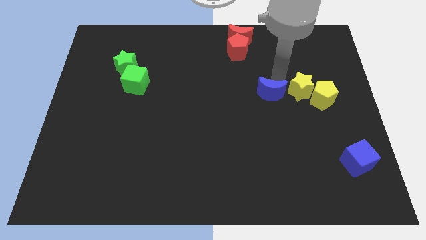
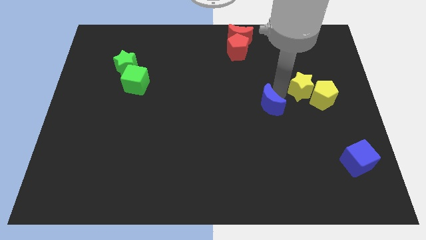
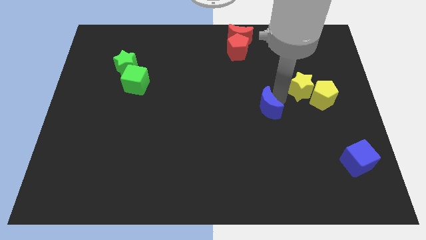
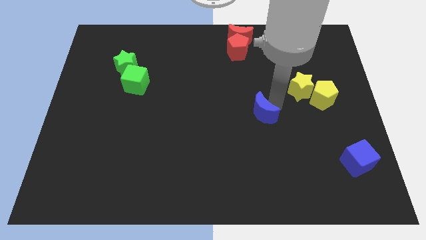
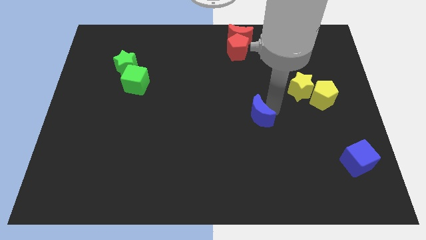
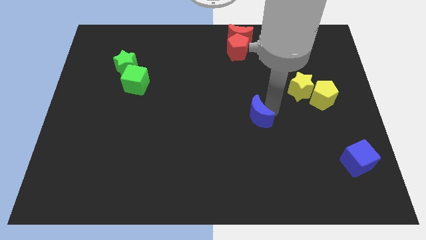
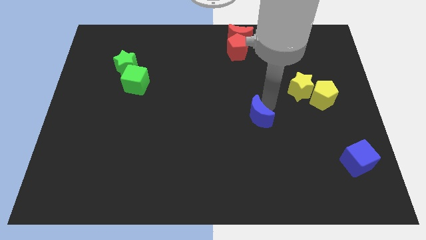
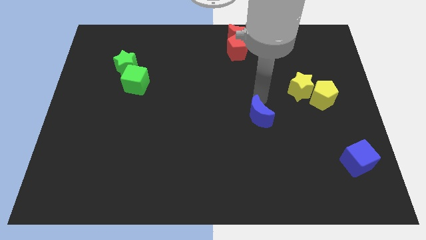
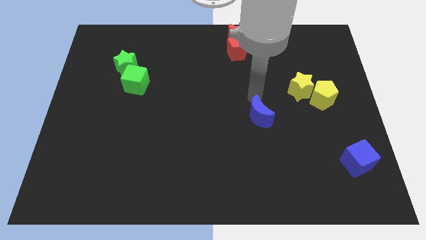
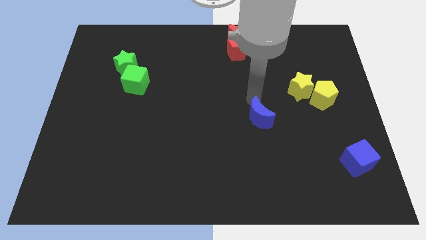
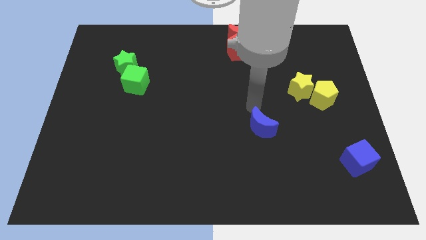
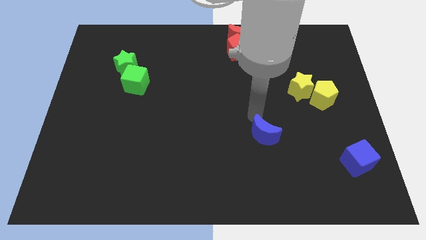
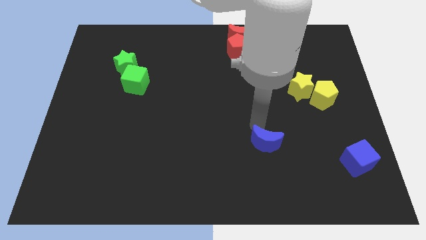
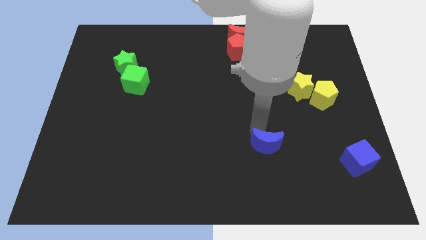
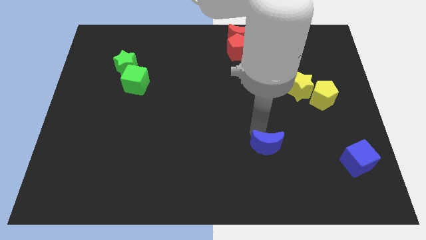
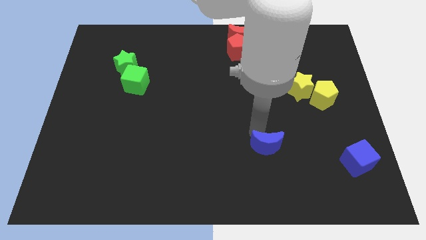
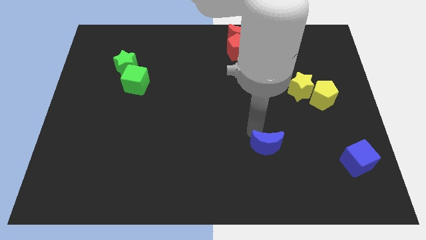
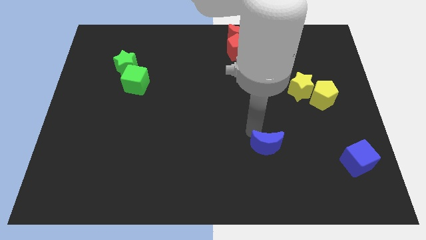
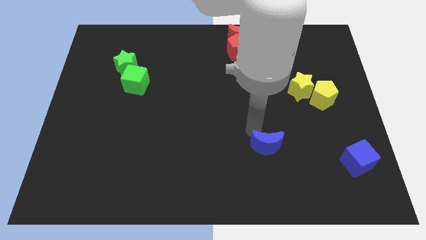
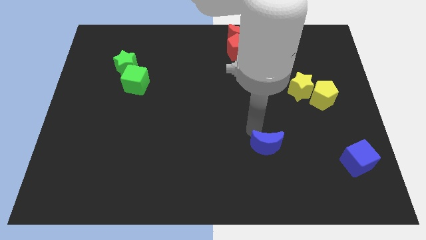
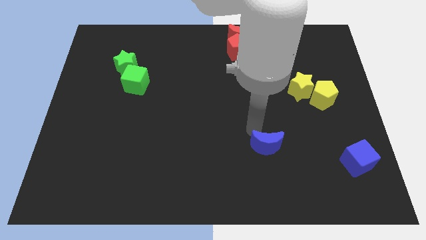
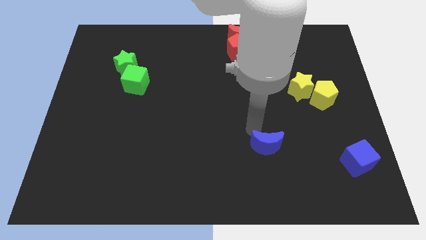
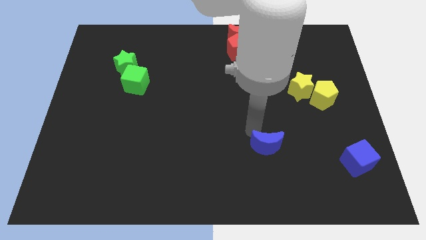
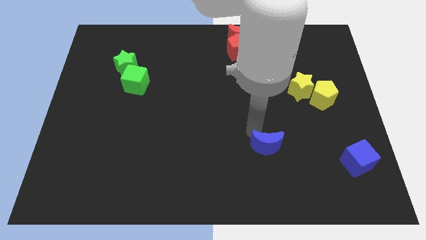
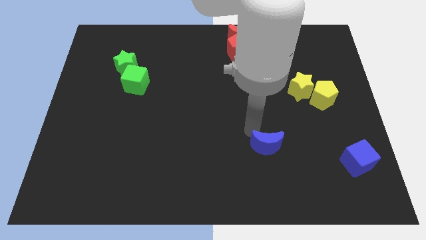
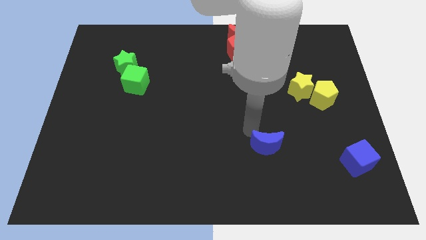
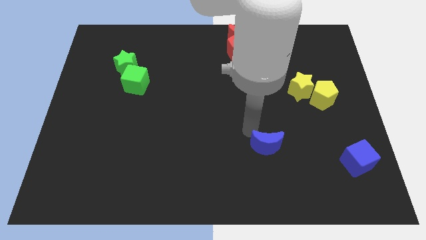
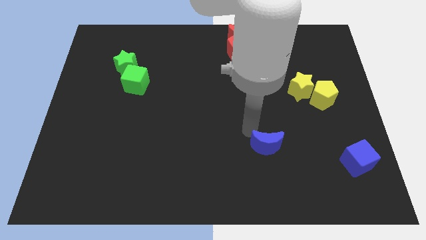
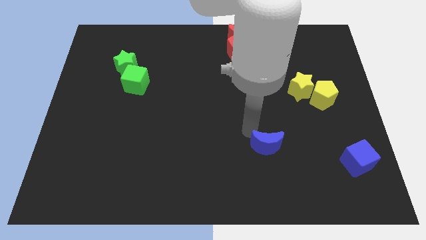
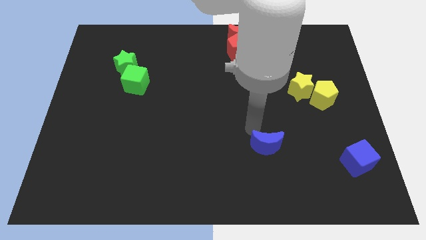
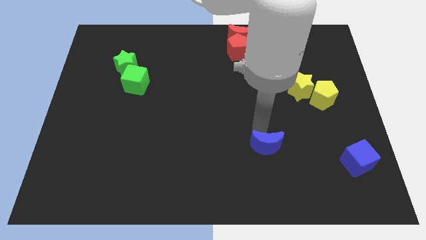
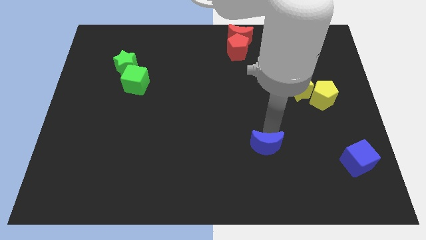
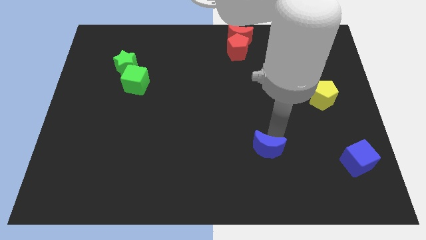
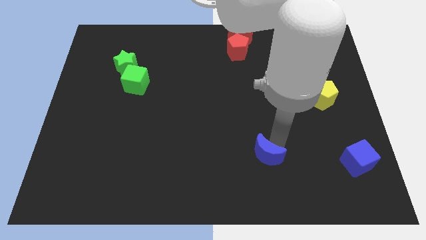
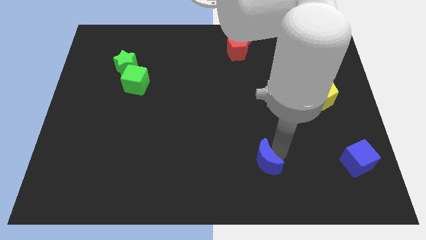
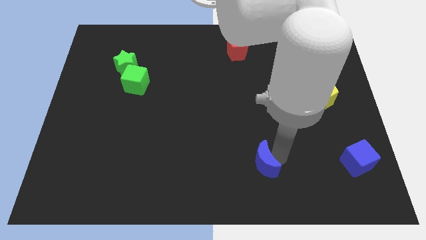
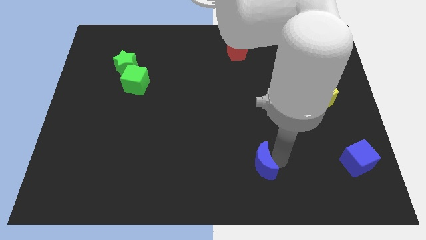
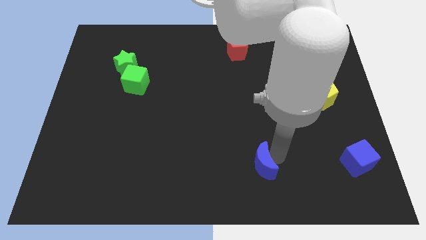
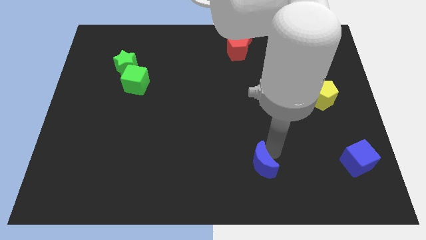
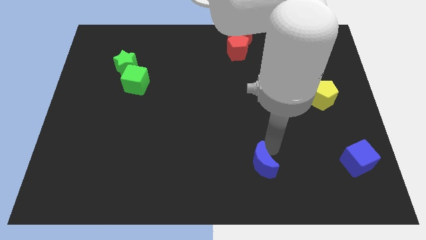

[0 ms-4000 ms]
move the blue crescent towards the bottom of the board

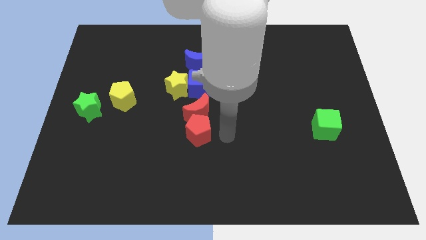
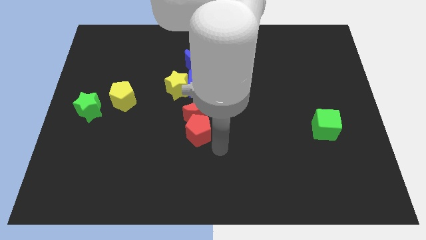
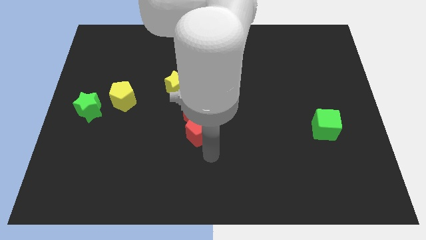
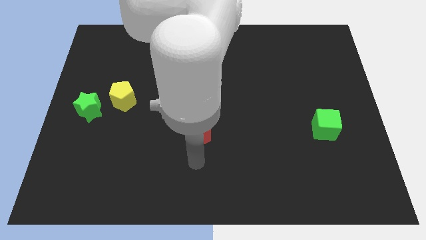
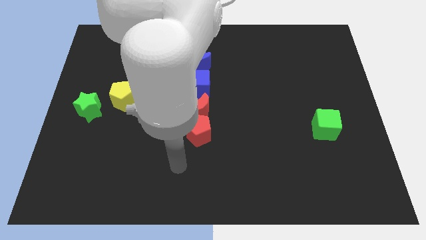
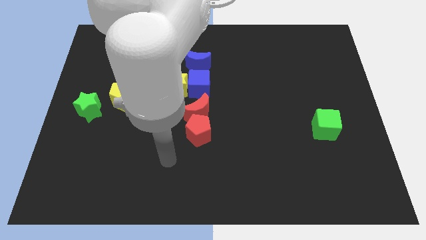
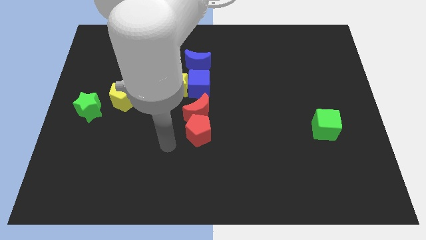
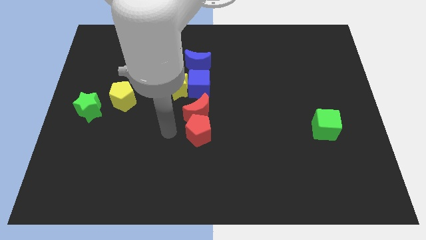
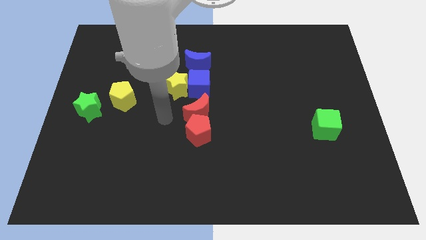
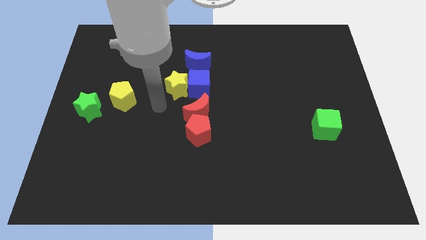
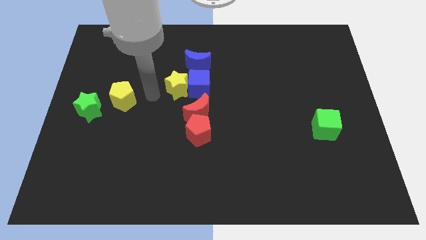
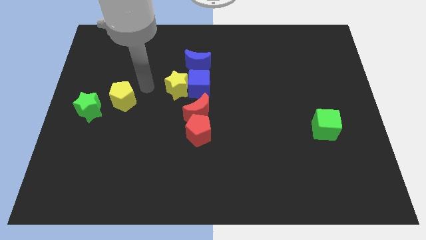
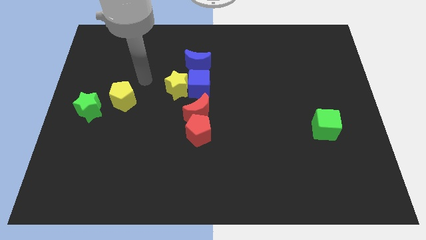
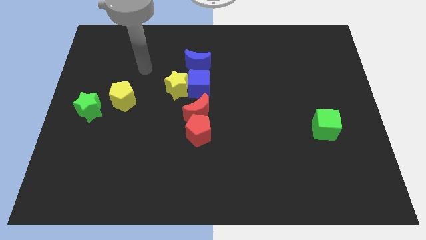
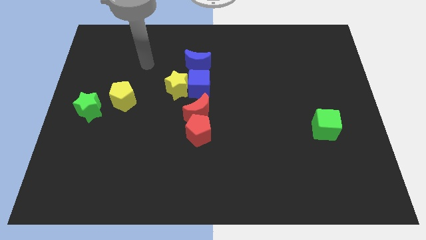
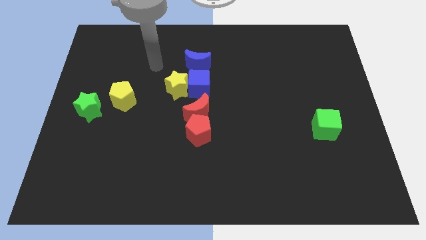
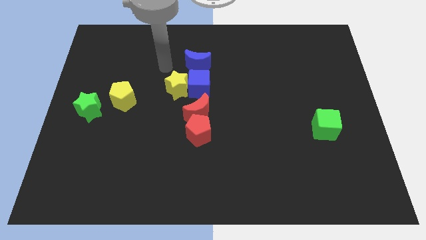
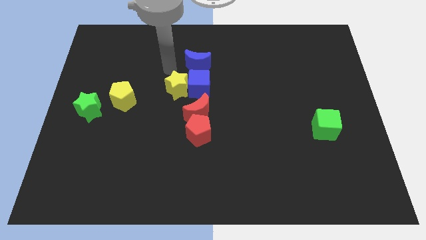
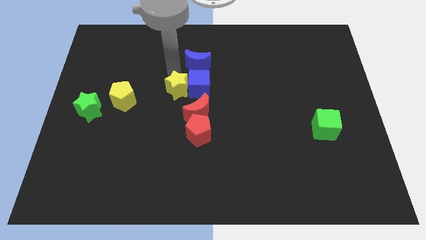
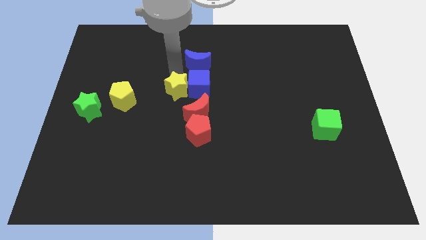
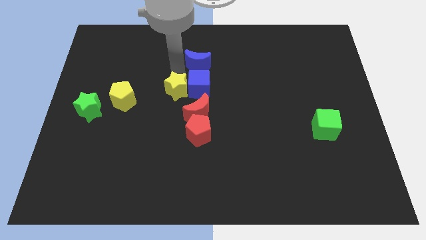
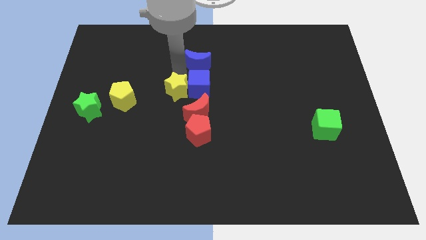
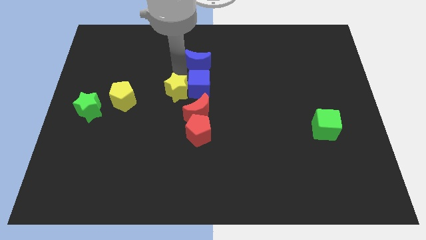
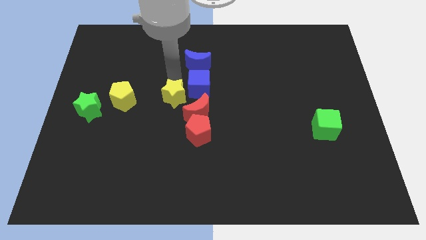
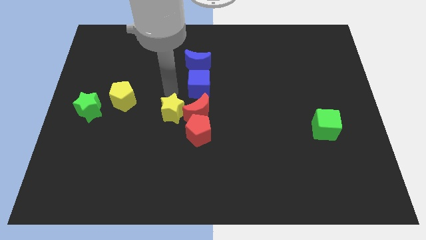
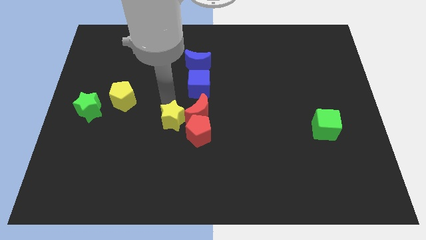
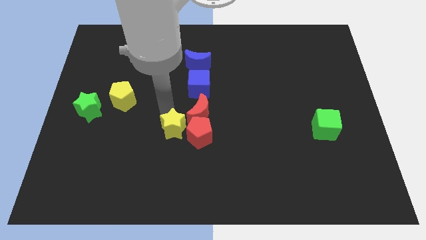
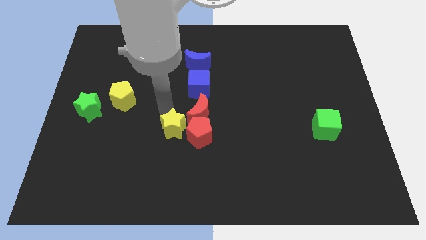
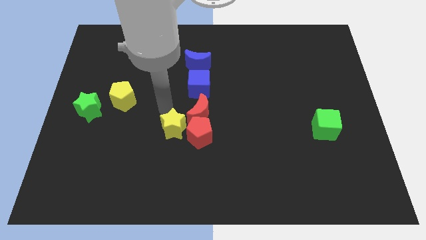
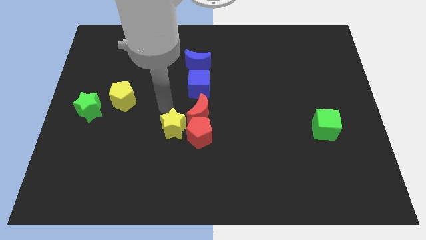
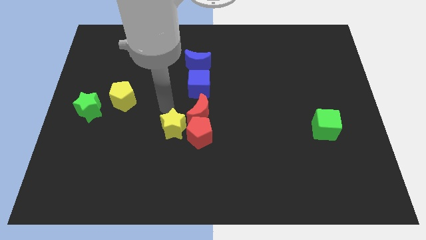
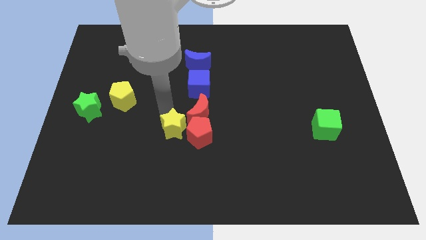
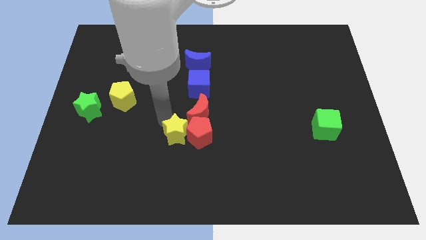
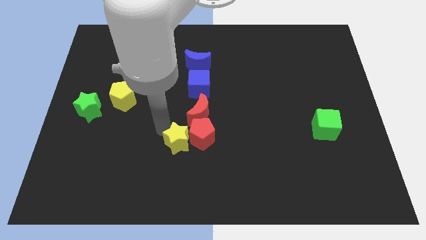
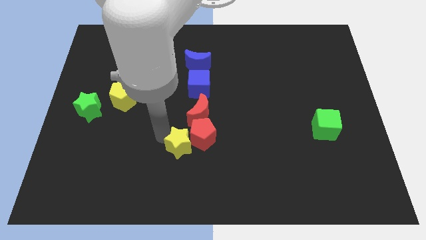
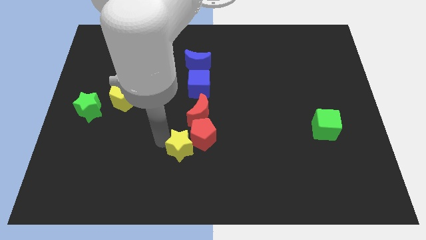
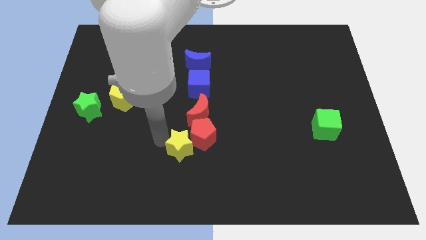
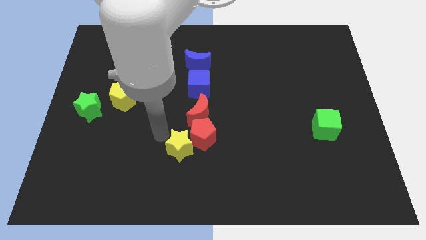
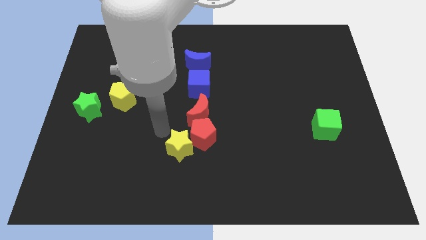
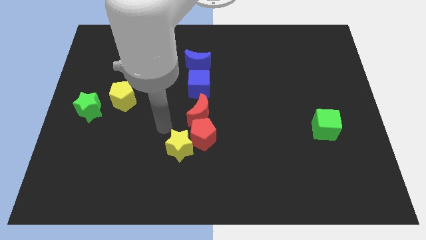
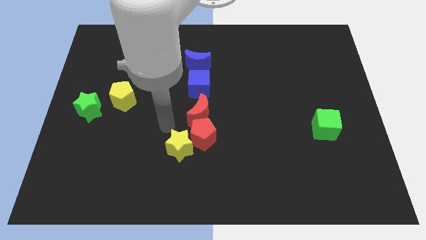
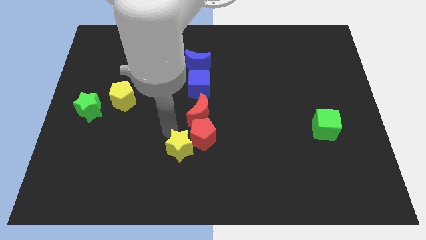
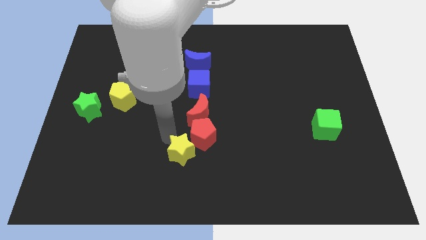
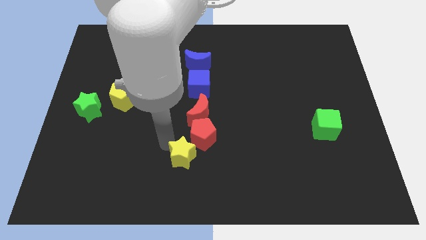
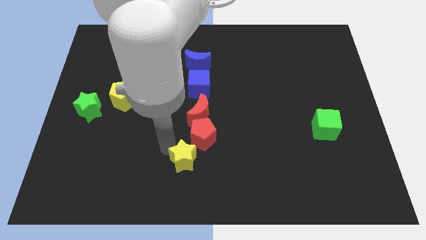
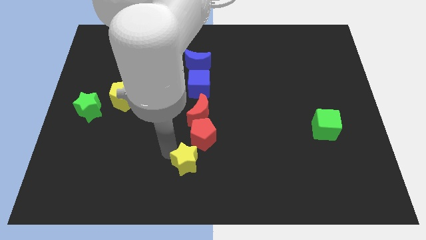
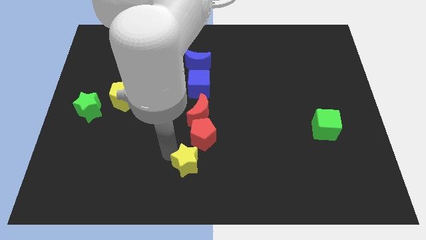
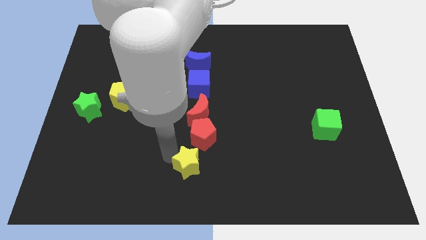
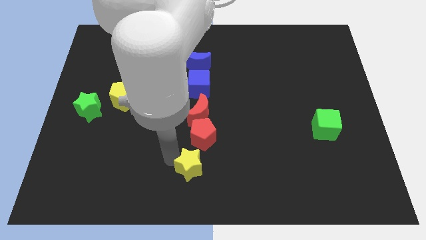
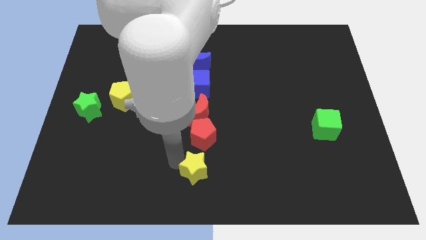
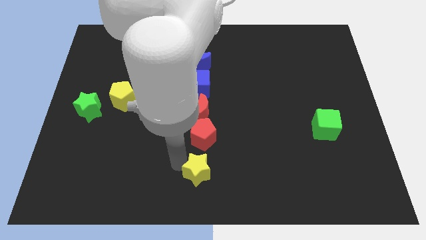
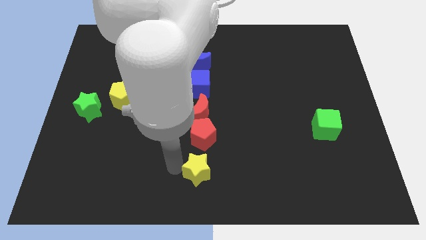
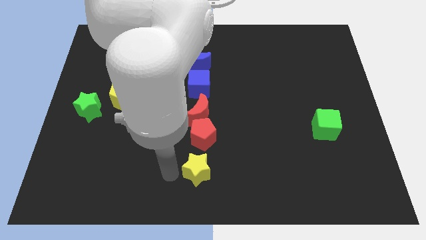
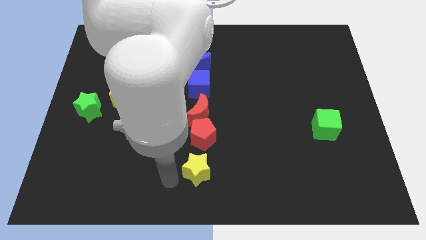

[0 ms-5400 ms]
place the yellow star below the red pentagon
